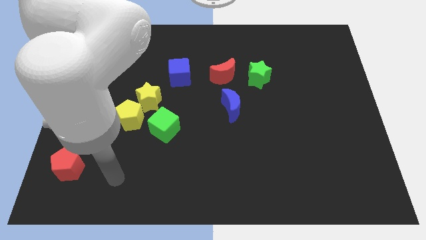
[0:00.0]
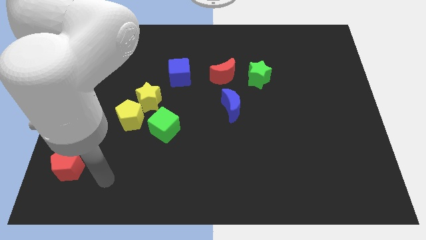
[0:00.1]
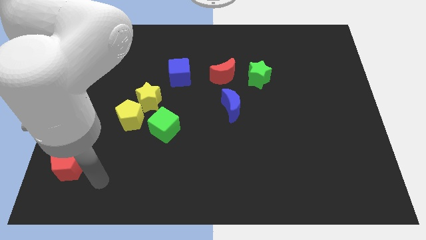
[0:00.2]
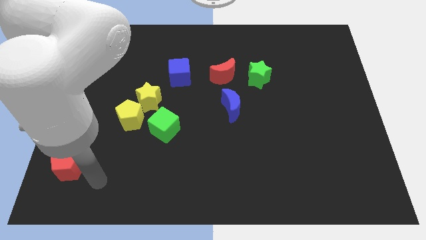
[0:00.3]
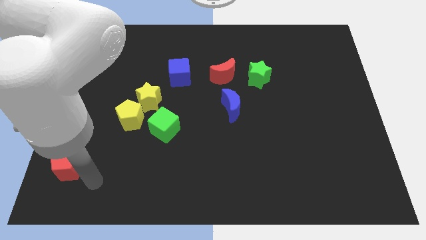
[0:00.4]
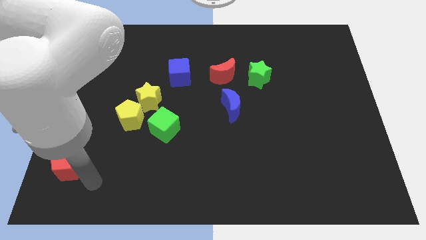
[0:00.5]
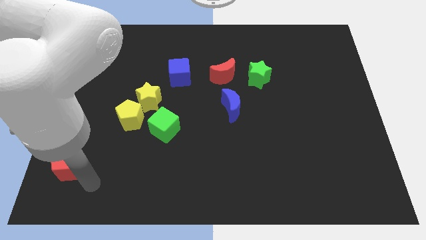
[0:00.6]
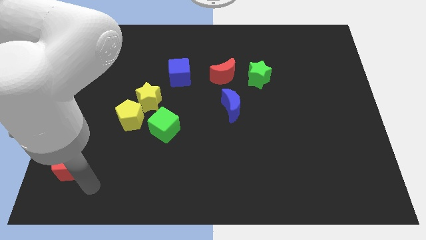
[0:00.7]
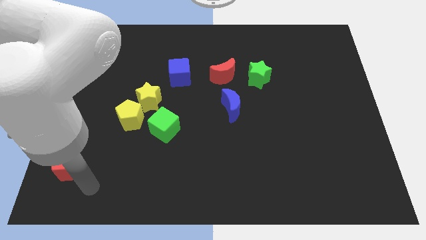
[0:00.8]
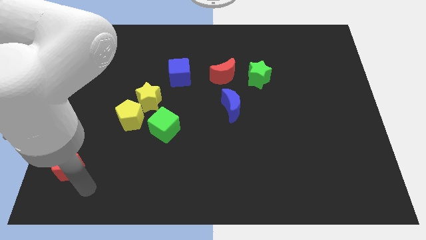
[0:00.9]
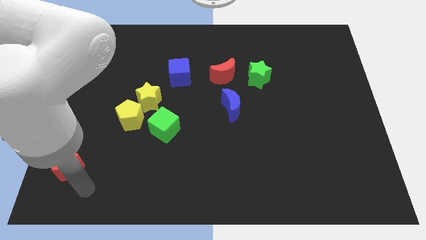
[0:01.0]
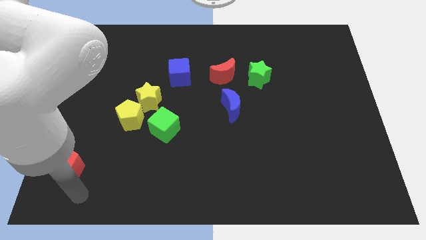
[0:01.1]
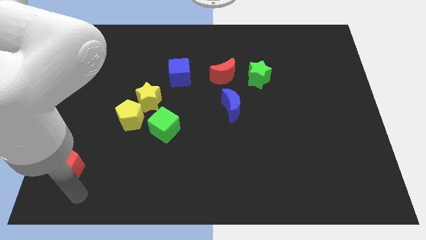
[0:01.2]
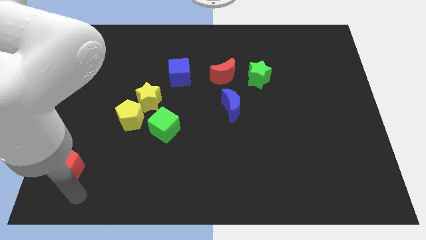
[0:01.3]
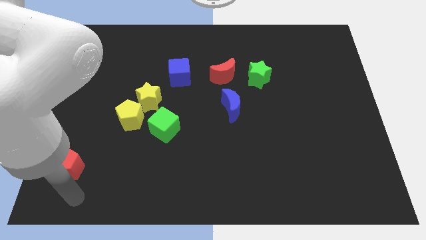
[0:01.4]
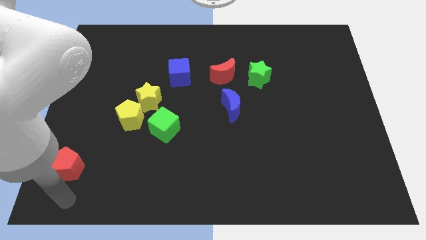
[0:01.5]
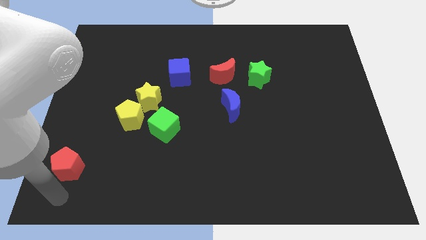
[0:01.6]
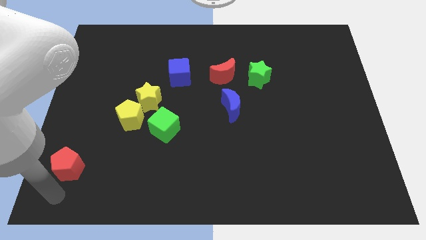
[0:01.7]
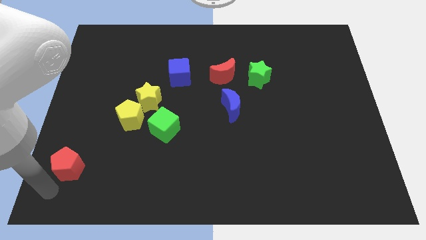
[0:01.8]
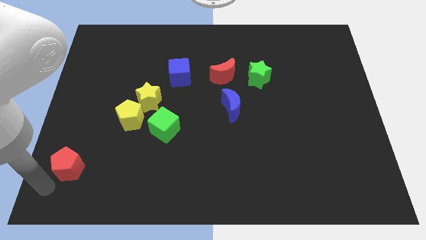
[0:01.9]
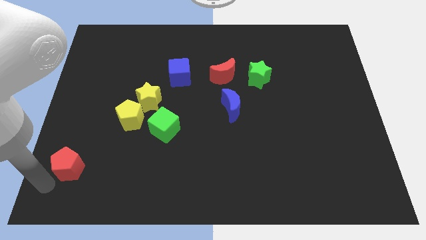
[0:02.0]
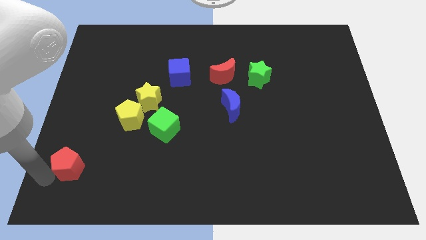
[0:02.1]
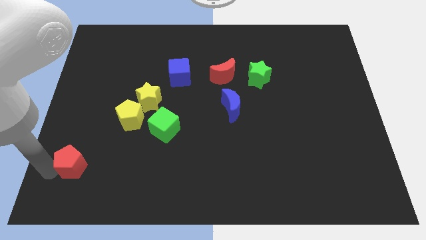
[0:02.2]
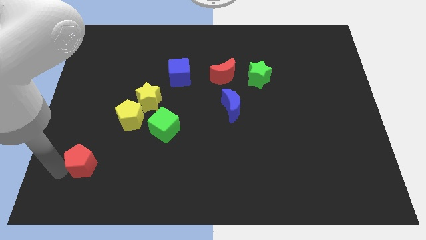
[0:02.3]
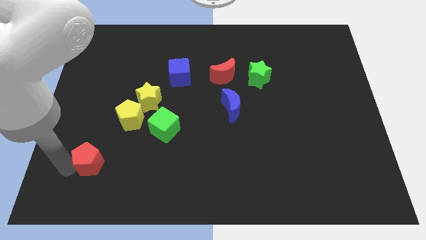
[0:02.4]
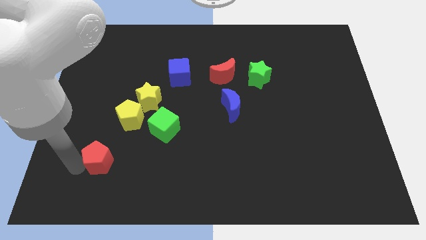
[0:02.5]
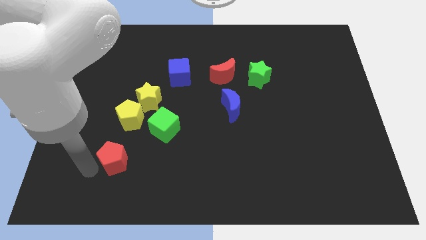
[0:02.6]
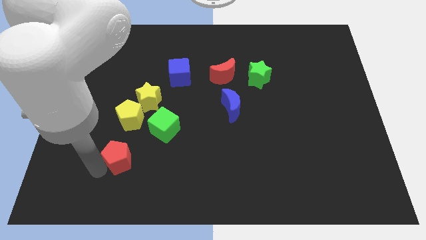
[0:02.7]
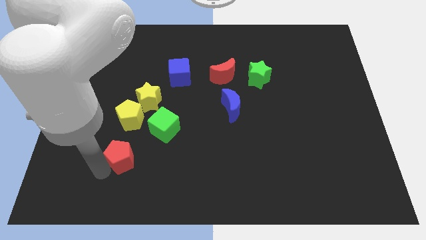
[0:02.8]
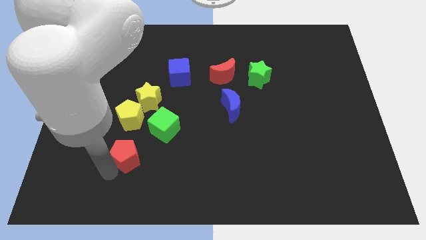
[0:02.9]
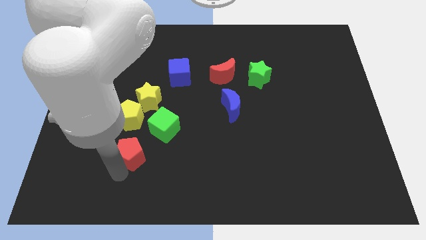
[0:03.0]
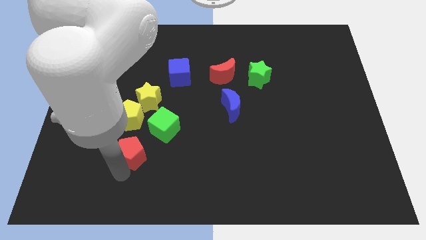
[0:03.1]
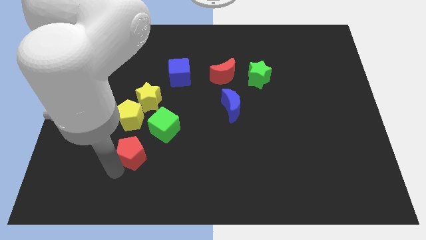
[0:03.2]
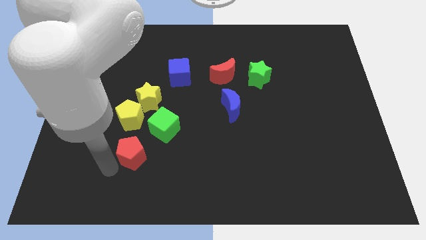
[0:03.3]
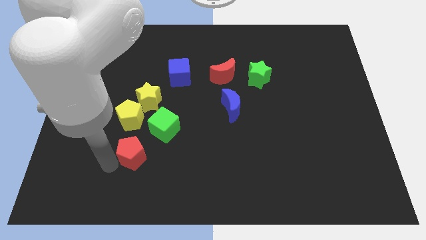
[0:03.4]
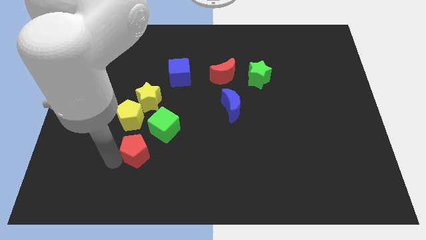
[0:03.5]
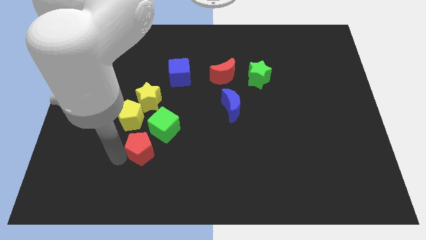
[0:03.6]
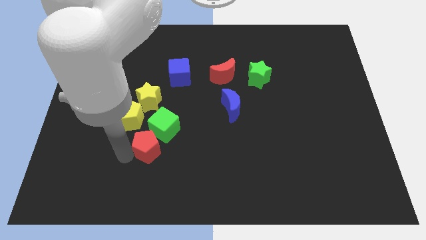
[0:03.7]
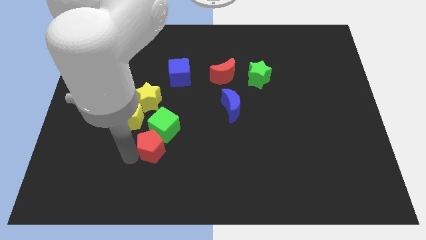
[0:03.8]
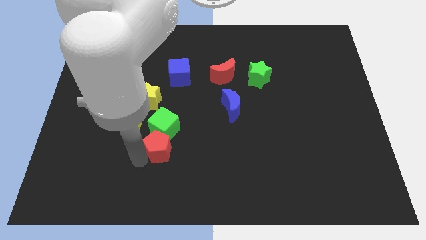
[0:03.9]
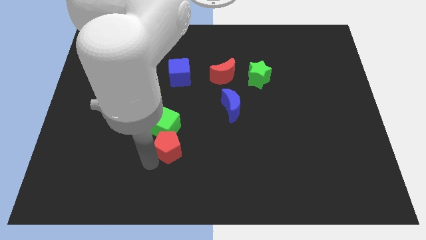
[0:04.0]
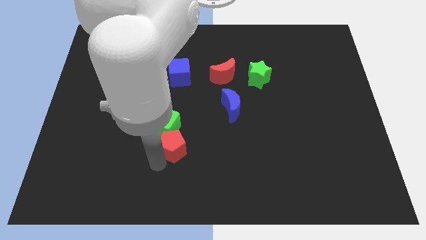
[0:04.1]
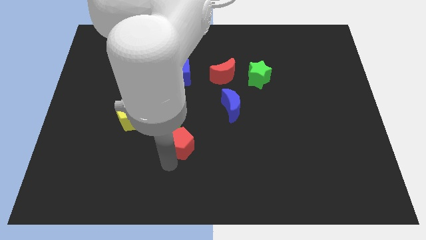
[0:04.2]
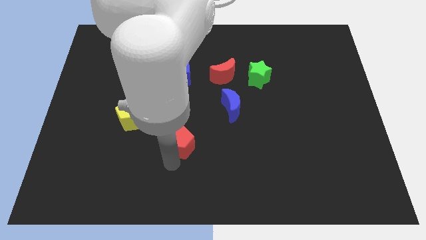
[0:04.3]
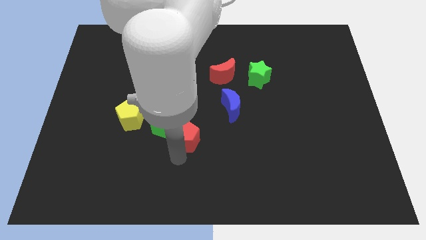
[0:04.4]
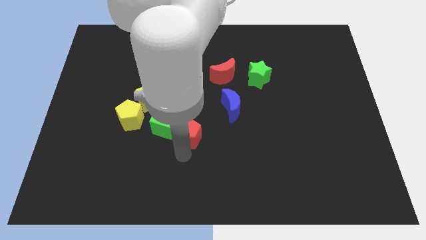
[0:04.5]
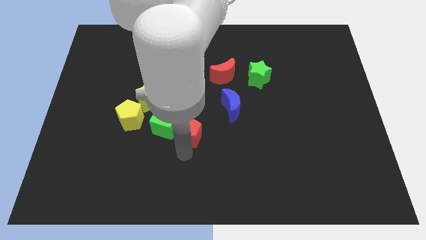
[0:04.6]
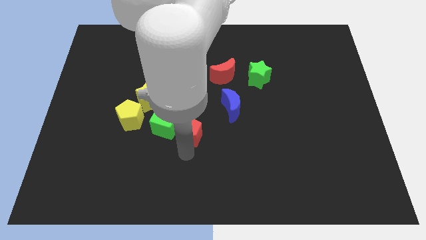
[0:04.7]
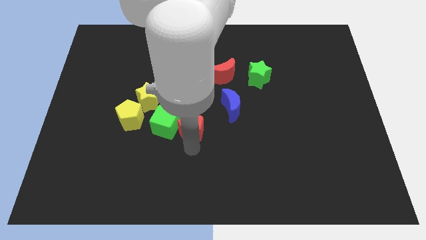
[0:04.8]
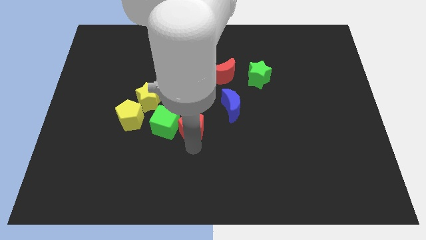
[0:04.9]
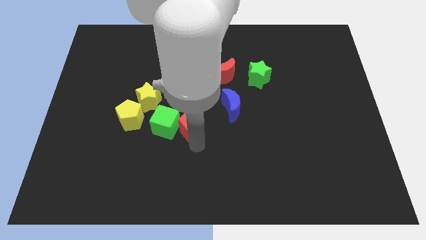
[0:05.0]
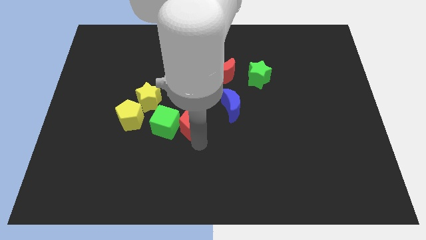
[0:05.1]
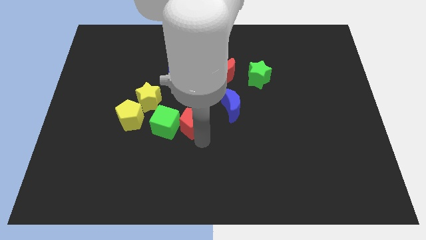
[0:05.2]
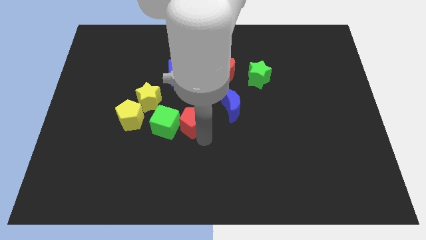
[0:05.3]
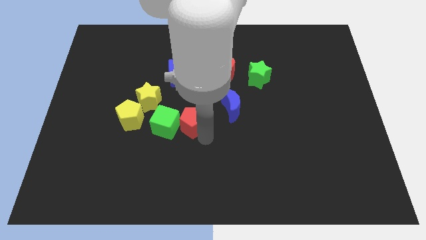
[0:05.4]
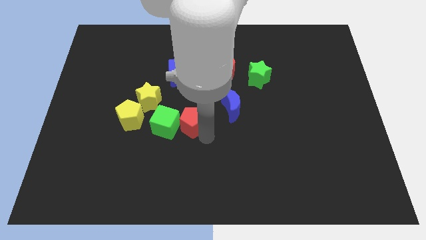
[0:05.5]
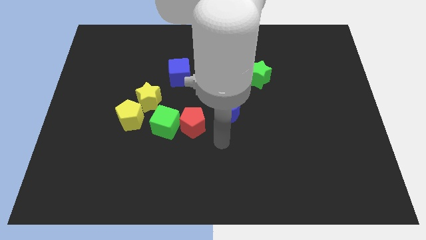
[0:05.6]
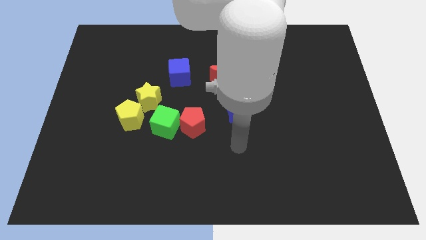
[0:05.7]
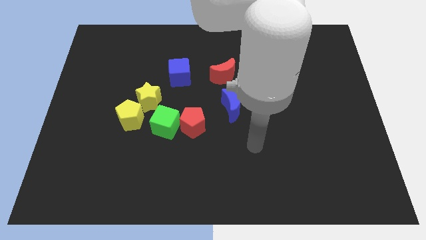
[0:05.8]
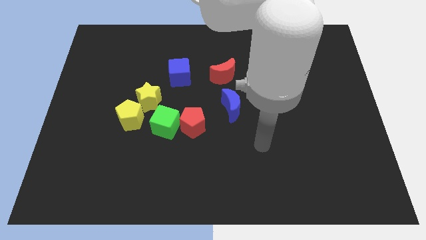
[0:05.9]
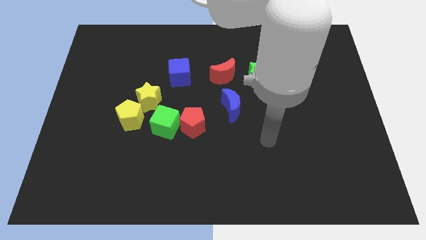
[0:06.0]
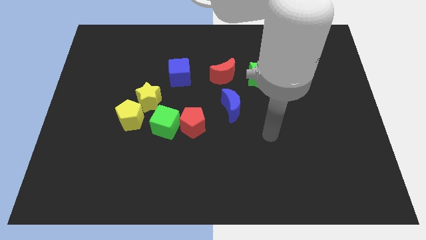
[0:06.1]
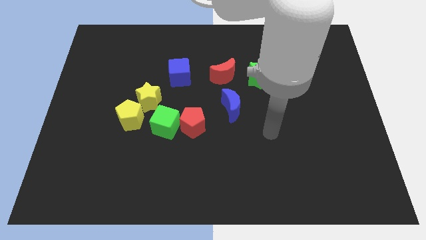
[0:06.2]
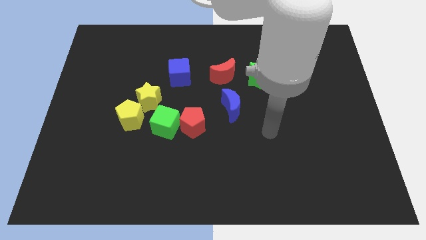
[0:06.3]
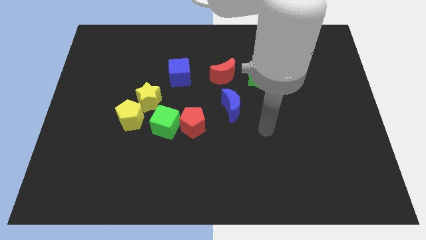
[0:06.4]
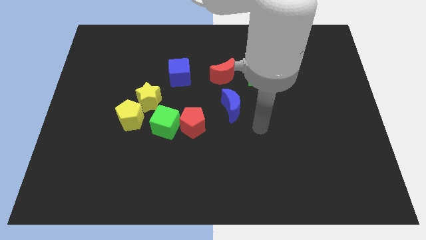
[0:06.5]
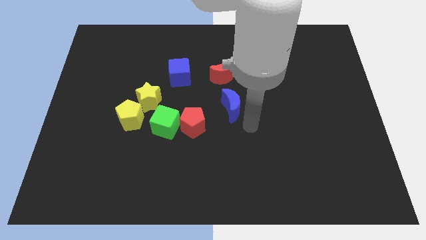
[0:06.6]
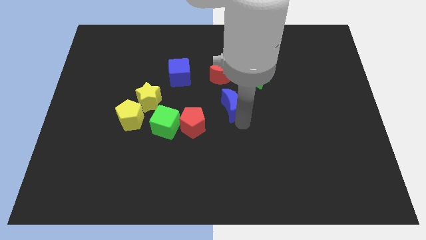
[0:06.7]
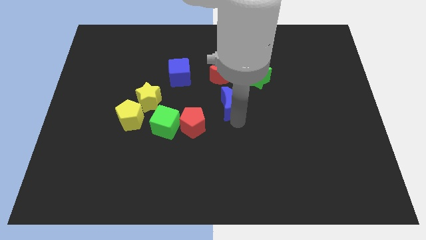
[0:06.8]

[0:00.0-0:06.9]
place the red pentagon in between the blue moon and green cube

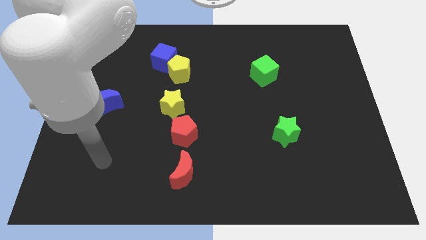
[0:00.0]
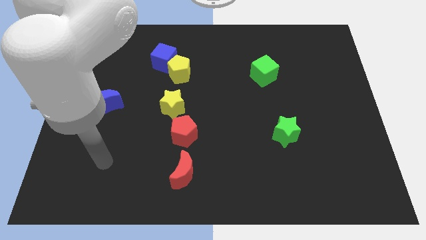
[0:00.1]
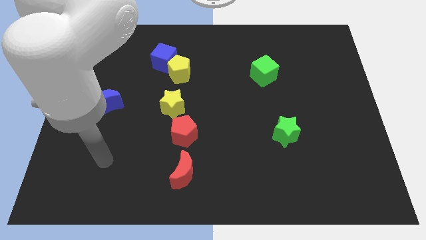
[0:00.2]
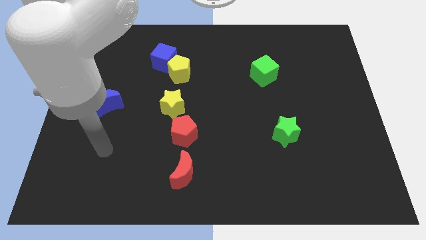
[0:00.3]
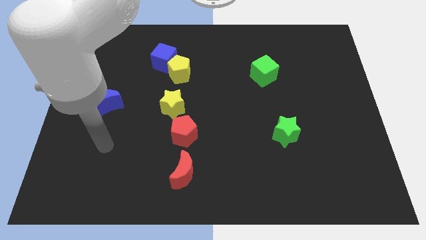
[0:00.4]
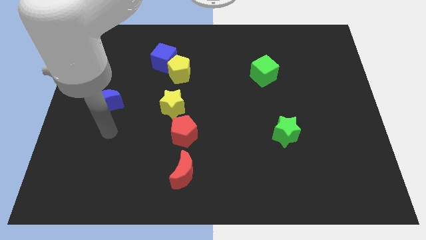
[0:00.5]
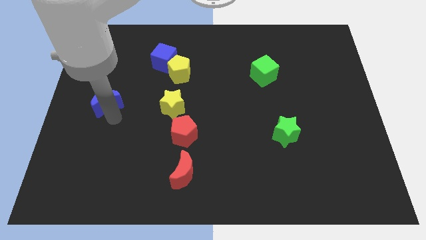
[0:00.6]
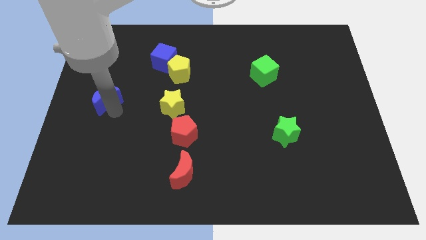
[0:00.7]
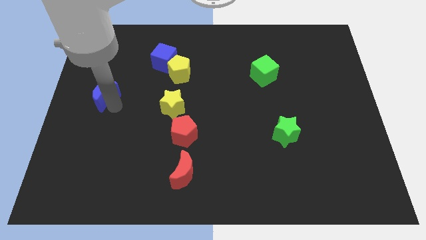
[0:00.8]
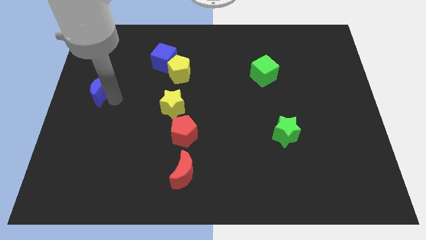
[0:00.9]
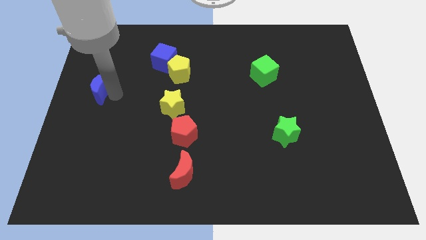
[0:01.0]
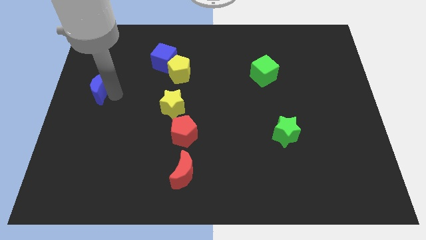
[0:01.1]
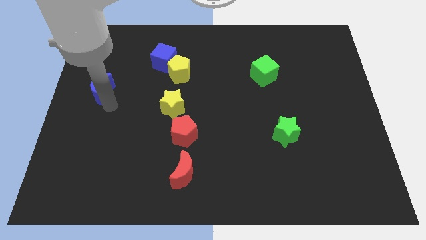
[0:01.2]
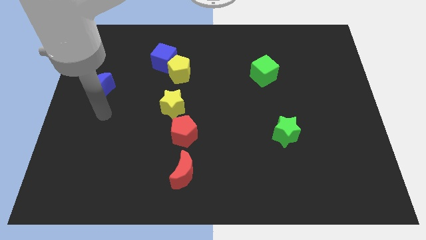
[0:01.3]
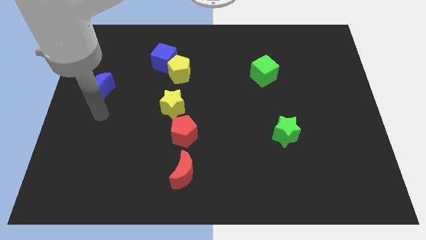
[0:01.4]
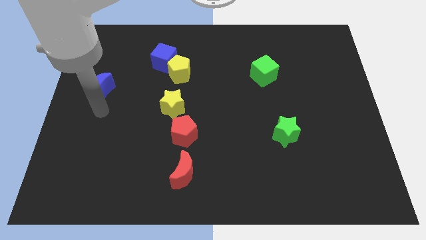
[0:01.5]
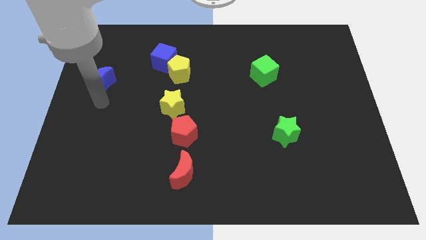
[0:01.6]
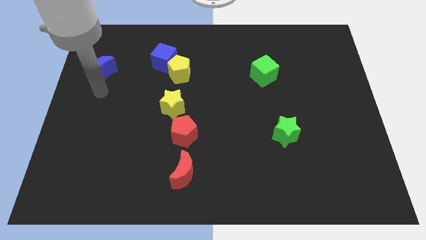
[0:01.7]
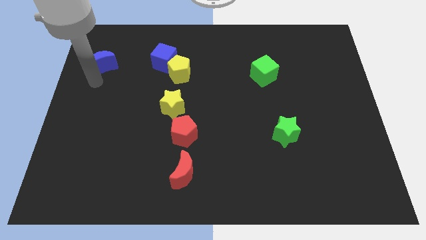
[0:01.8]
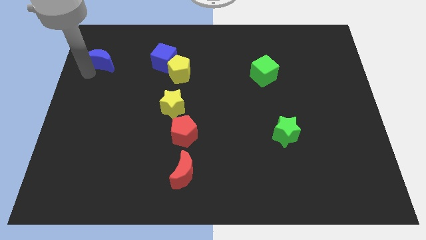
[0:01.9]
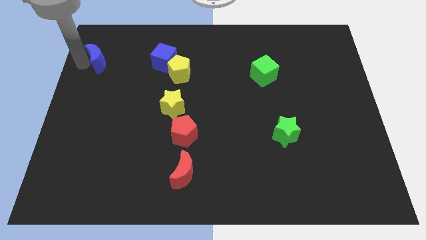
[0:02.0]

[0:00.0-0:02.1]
push the blue crescent towards left of the blue cube
